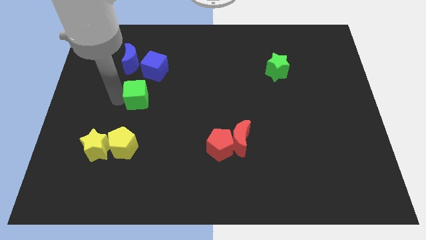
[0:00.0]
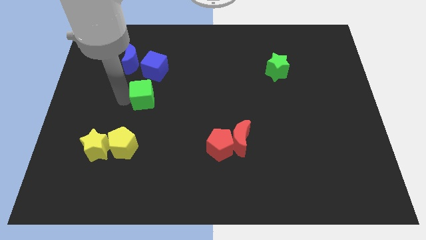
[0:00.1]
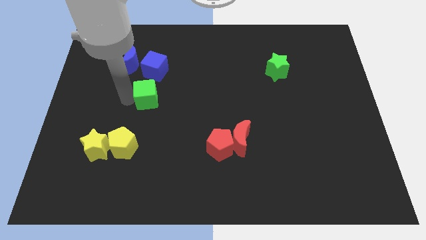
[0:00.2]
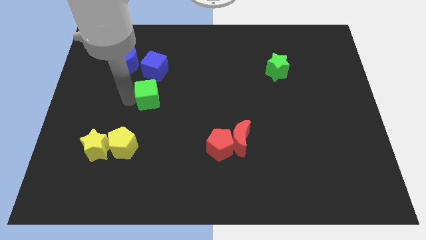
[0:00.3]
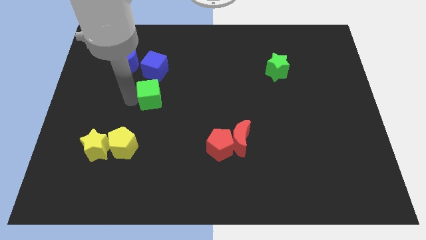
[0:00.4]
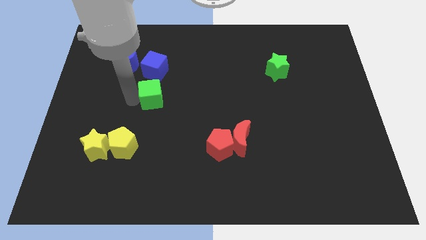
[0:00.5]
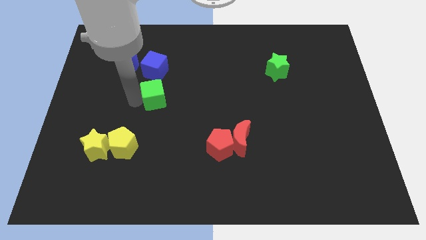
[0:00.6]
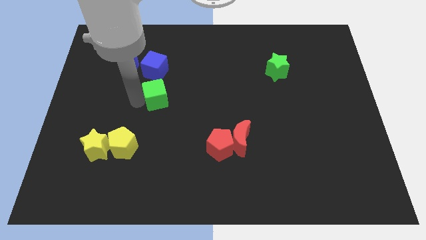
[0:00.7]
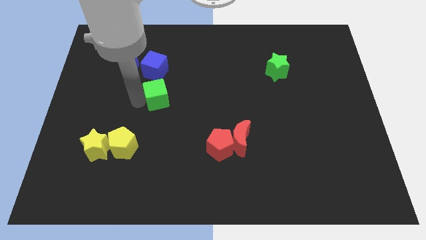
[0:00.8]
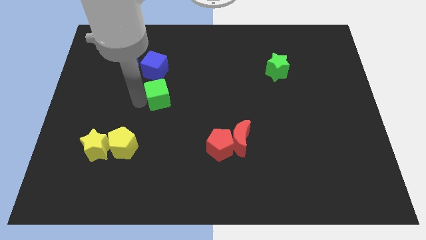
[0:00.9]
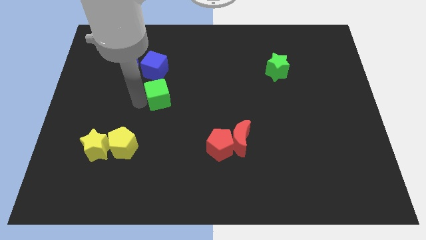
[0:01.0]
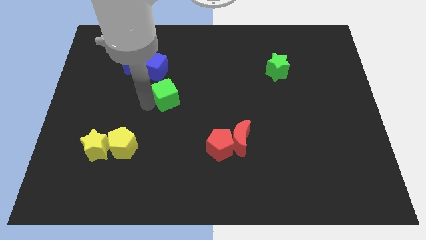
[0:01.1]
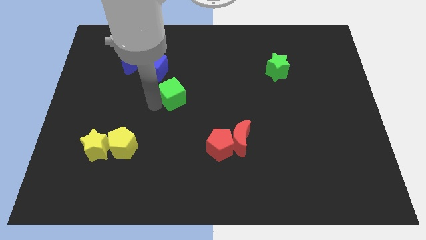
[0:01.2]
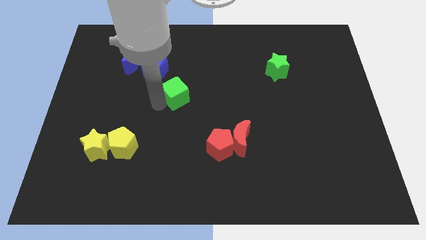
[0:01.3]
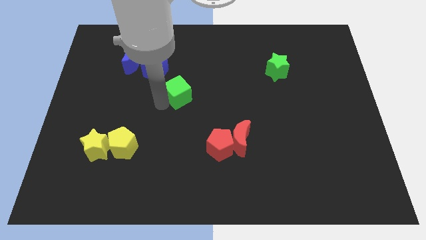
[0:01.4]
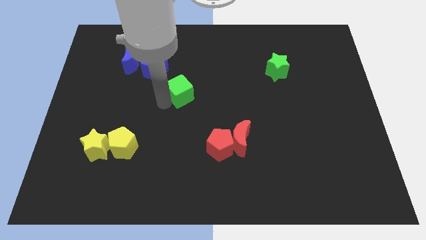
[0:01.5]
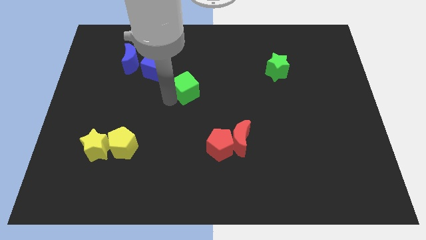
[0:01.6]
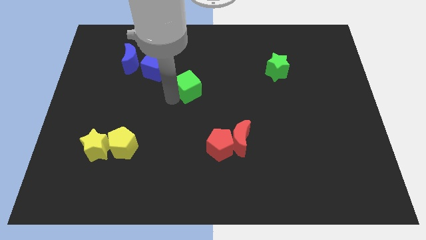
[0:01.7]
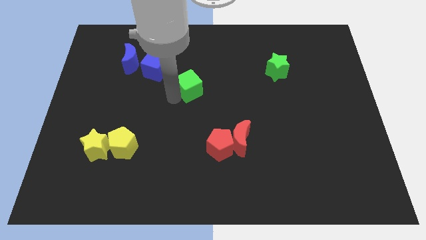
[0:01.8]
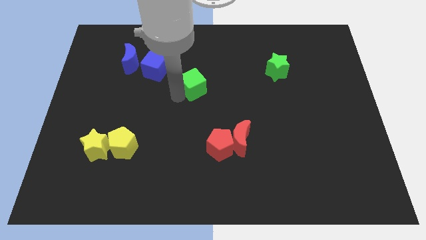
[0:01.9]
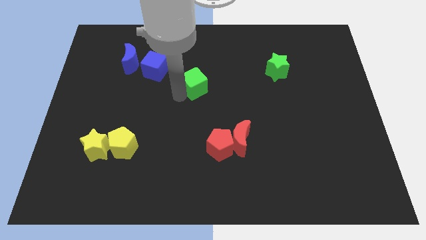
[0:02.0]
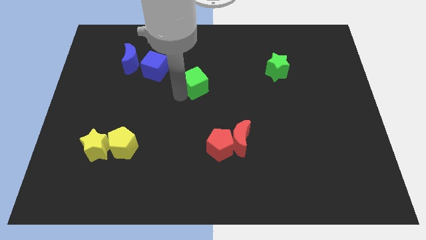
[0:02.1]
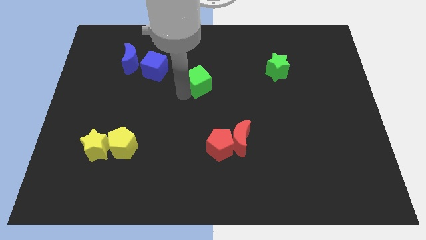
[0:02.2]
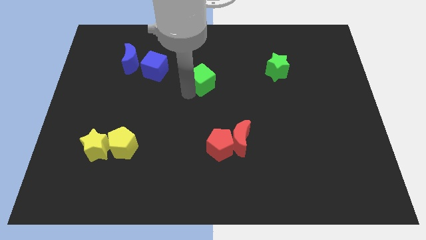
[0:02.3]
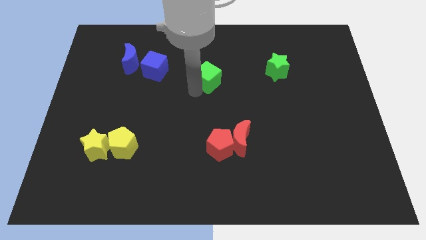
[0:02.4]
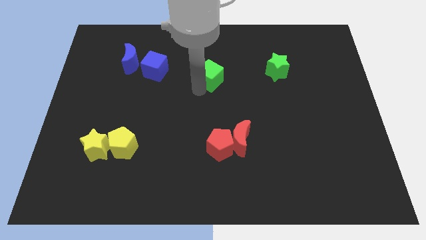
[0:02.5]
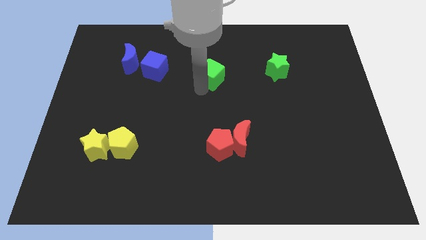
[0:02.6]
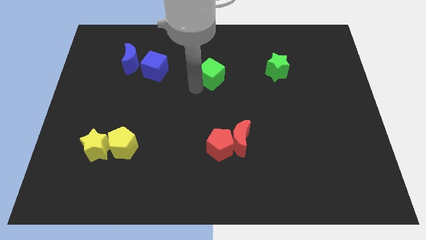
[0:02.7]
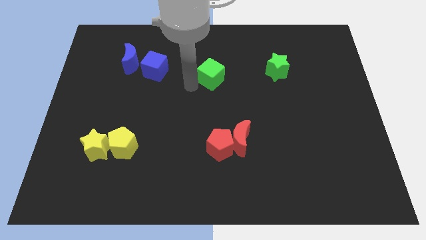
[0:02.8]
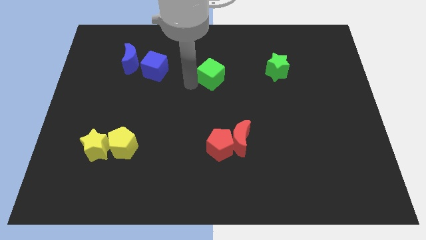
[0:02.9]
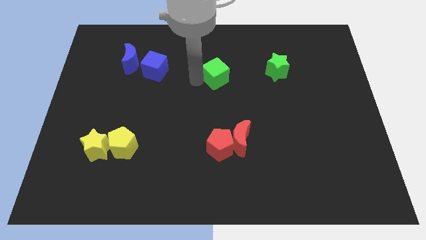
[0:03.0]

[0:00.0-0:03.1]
move the green cube in between green star and blue cube

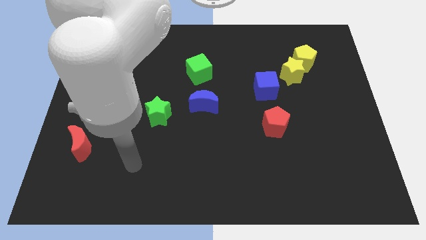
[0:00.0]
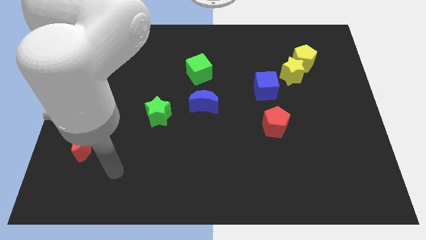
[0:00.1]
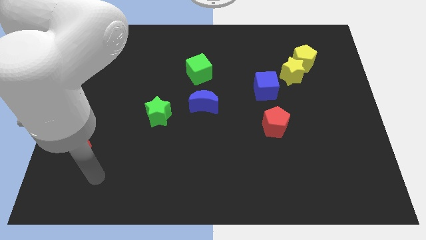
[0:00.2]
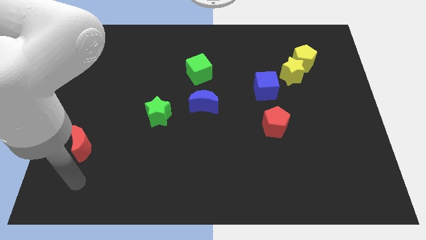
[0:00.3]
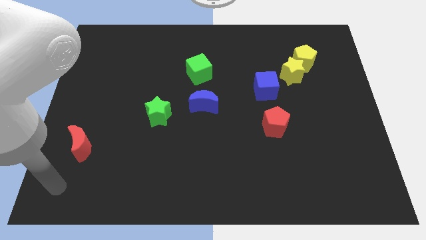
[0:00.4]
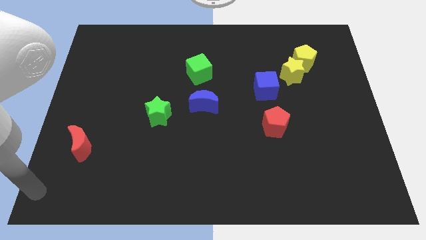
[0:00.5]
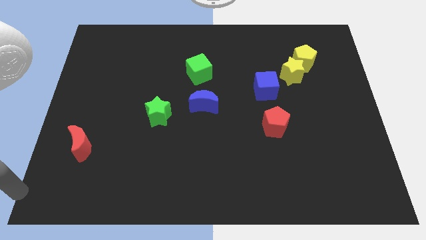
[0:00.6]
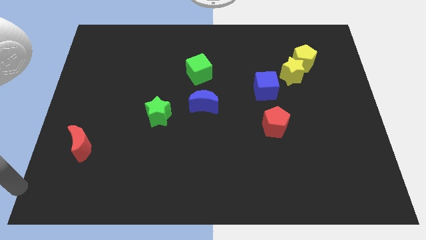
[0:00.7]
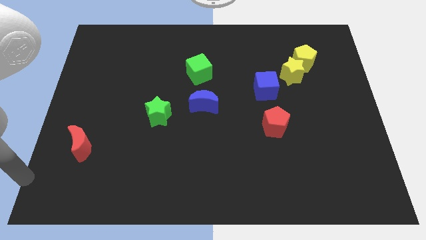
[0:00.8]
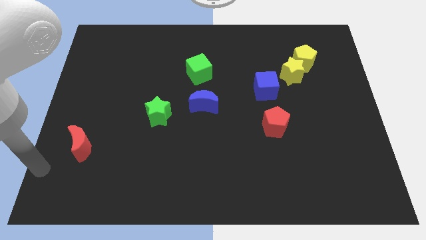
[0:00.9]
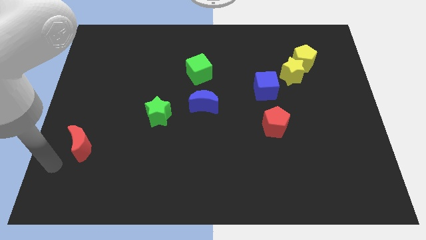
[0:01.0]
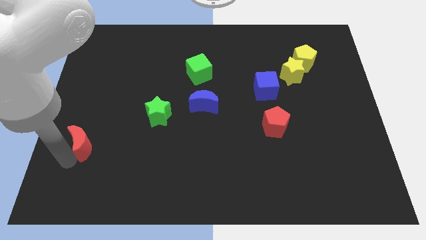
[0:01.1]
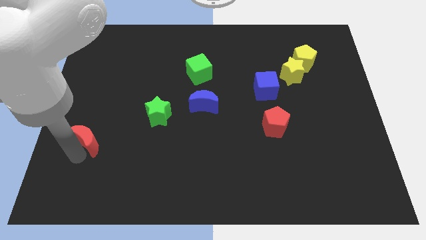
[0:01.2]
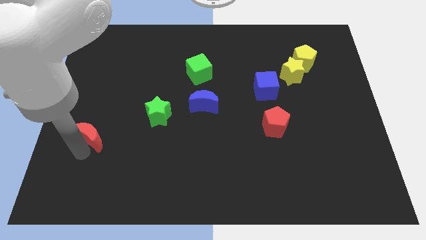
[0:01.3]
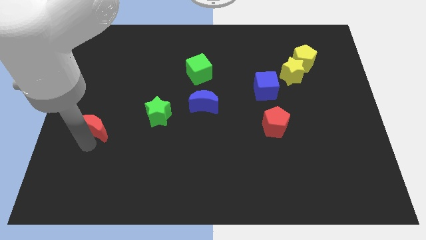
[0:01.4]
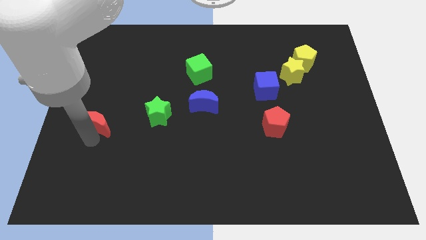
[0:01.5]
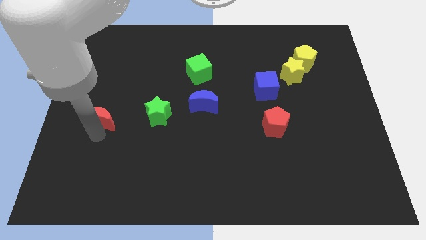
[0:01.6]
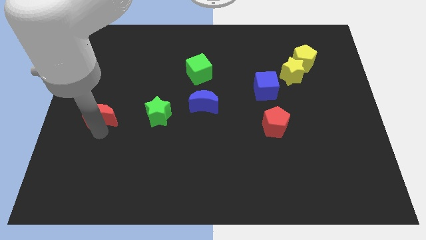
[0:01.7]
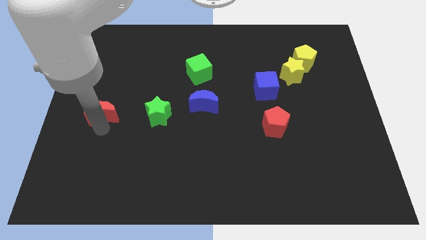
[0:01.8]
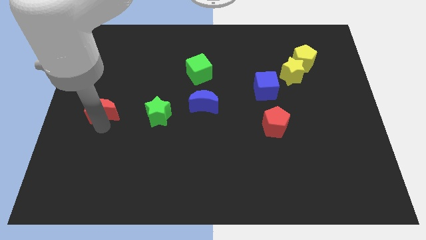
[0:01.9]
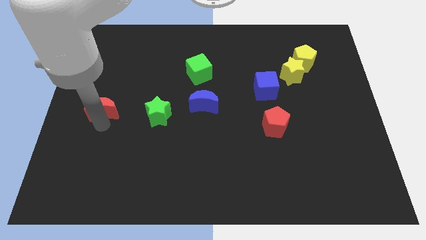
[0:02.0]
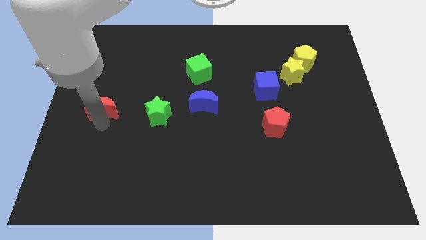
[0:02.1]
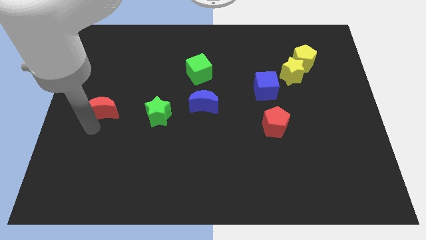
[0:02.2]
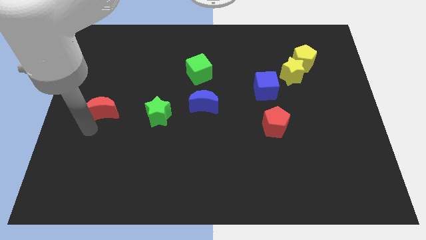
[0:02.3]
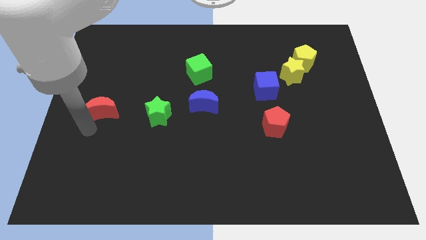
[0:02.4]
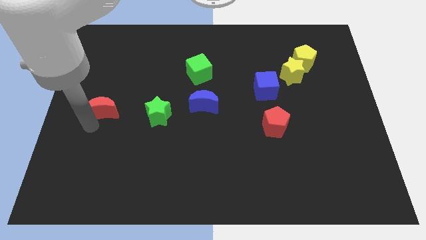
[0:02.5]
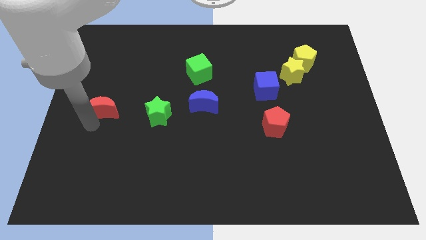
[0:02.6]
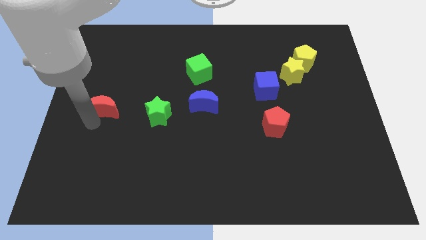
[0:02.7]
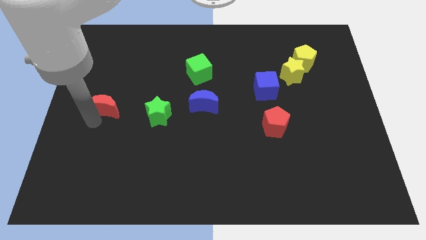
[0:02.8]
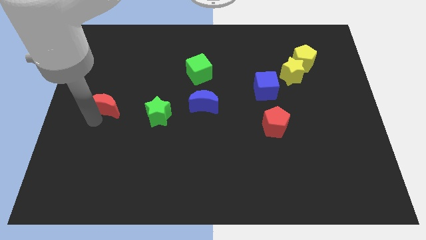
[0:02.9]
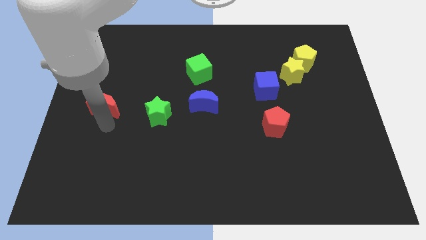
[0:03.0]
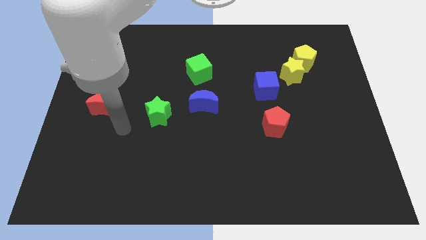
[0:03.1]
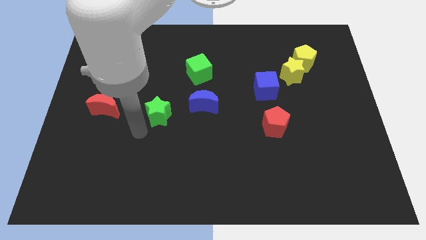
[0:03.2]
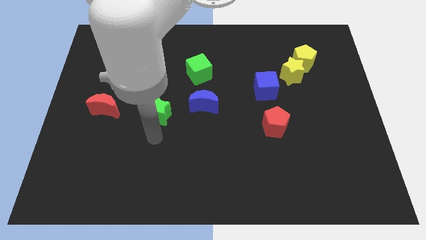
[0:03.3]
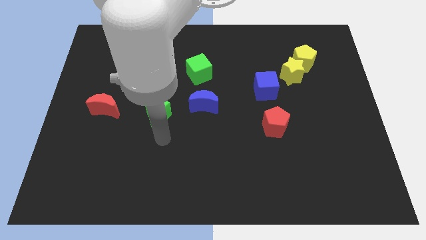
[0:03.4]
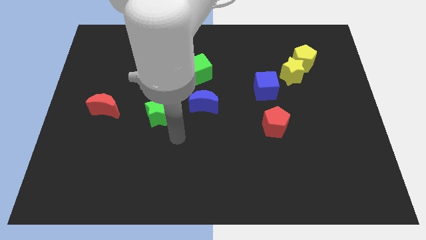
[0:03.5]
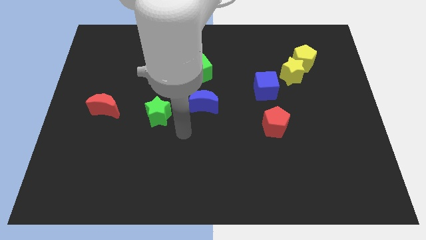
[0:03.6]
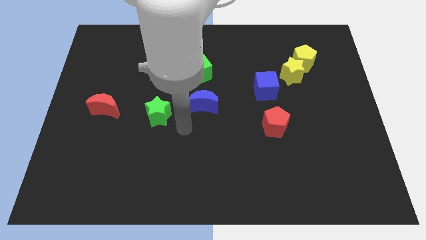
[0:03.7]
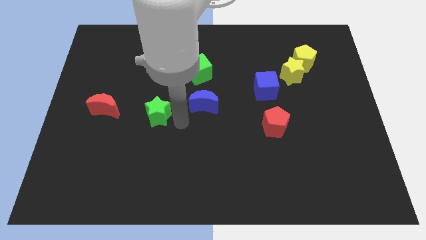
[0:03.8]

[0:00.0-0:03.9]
move the red moon to the left side of the green star

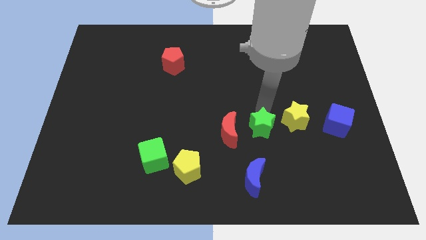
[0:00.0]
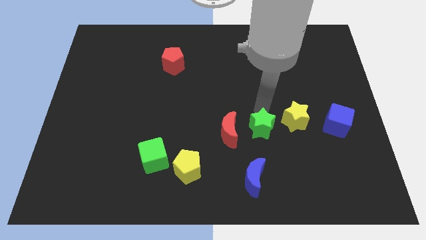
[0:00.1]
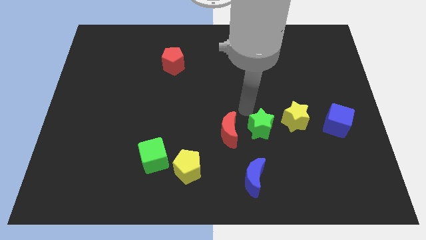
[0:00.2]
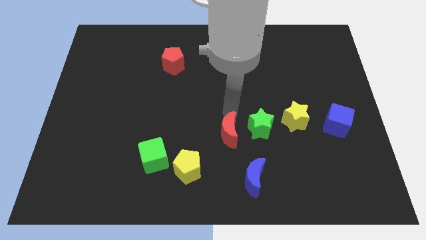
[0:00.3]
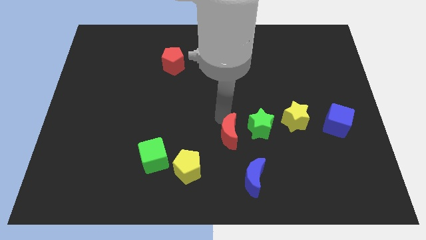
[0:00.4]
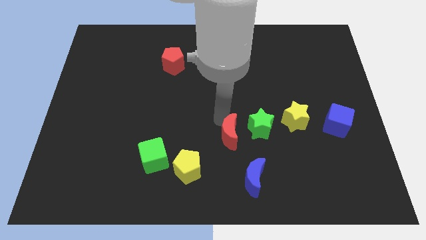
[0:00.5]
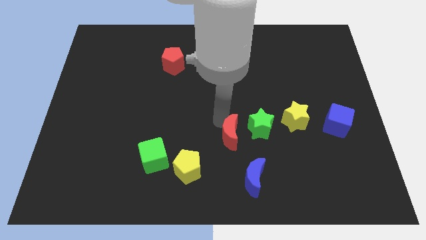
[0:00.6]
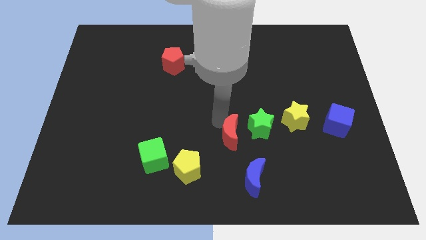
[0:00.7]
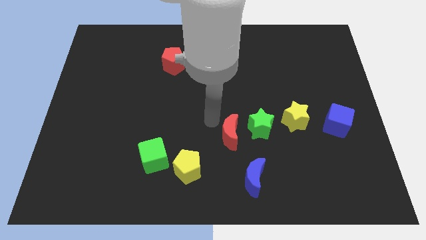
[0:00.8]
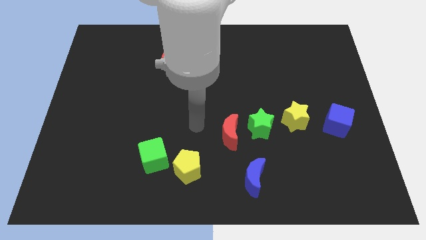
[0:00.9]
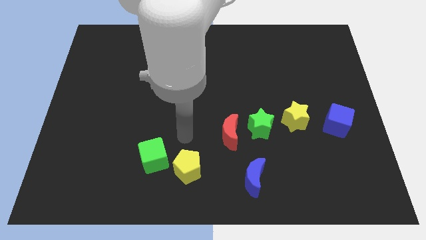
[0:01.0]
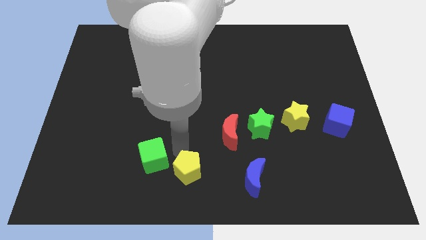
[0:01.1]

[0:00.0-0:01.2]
move your arm away from the green star

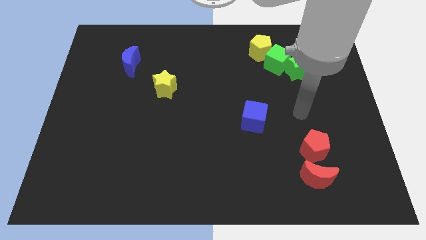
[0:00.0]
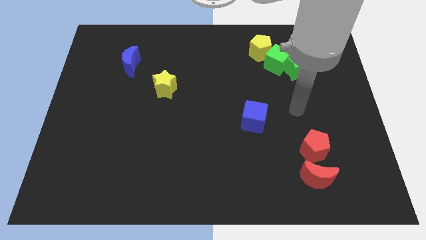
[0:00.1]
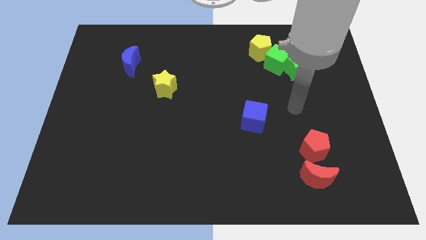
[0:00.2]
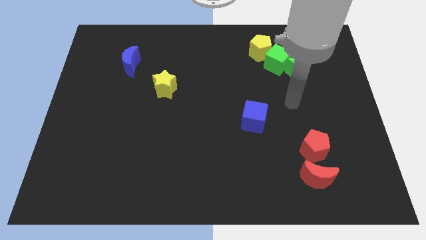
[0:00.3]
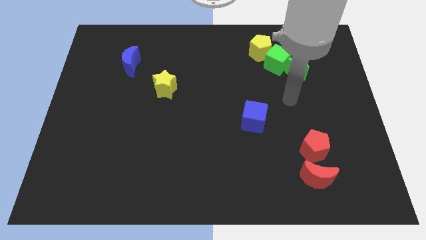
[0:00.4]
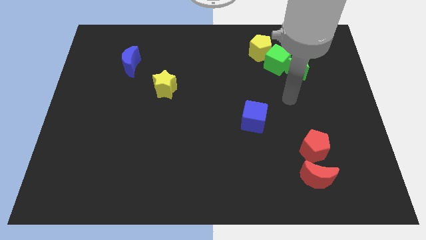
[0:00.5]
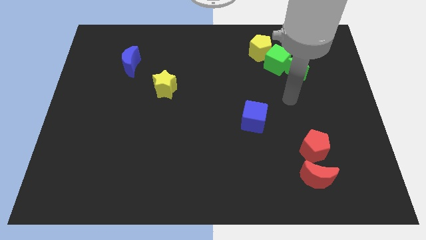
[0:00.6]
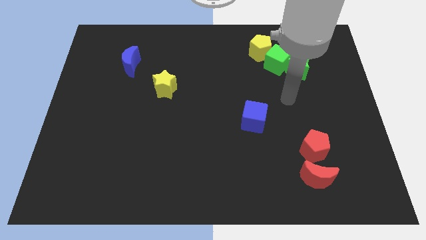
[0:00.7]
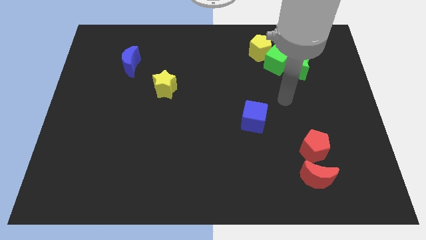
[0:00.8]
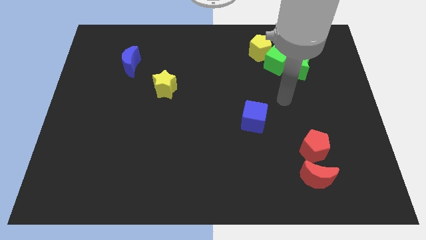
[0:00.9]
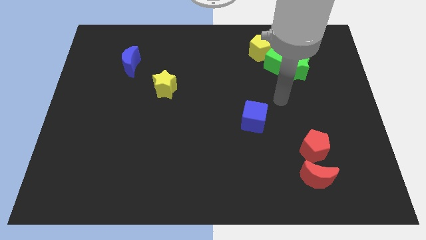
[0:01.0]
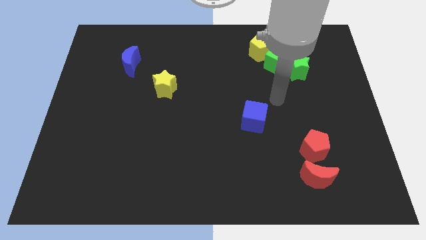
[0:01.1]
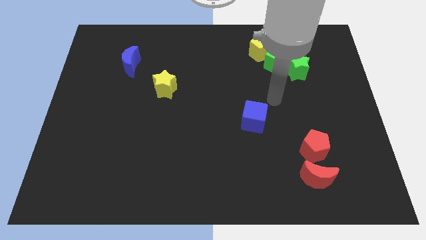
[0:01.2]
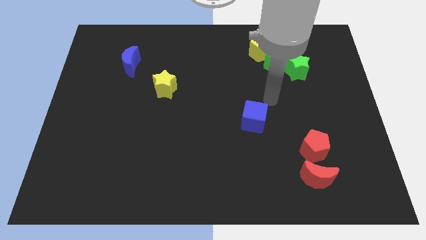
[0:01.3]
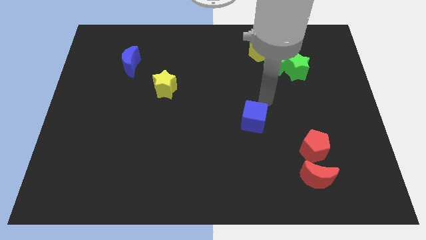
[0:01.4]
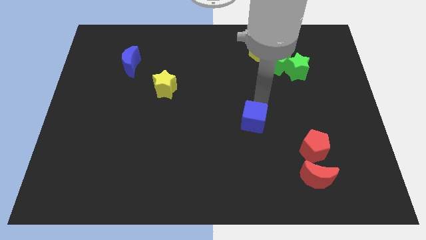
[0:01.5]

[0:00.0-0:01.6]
place your arm to the top side of the blue cube
